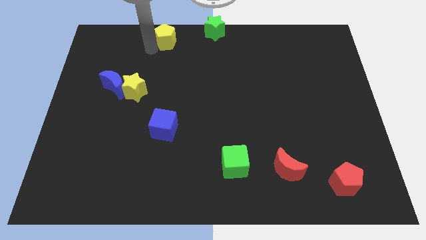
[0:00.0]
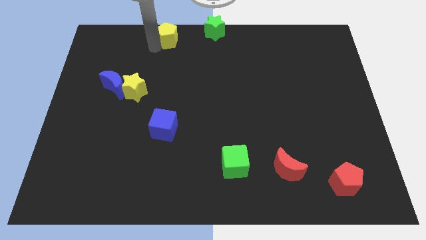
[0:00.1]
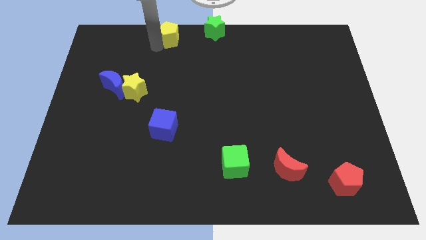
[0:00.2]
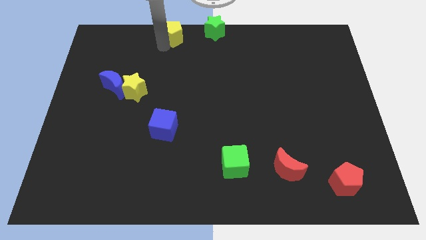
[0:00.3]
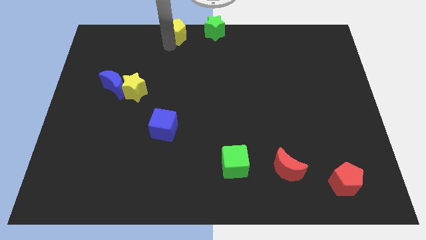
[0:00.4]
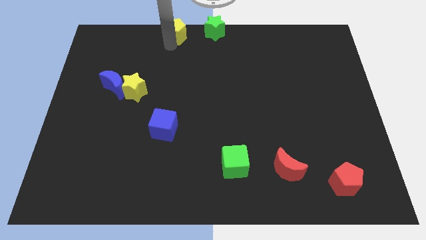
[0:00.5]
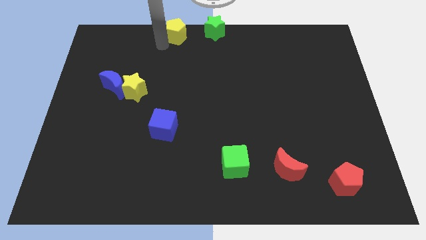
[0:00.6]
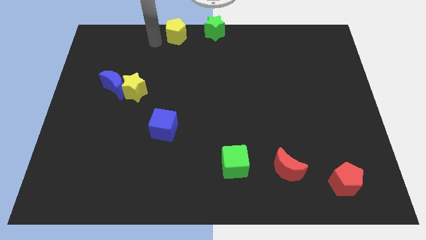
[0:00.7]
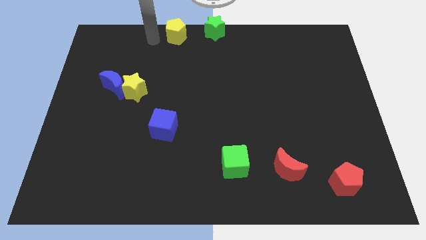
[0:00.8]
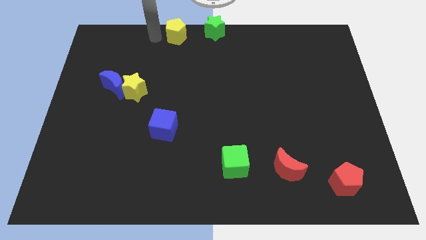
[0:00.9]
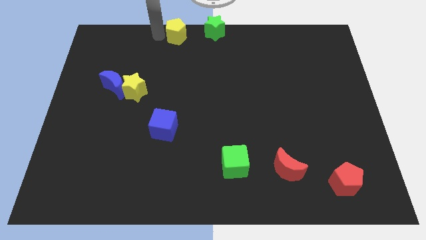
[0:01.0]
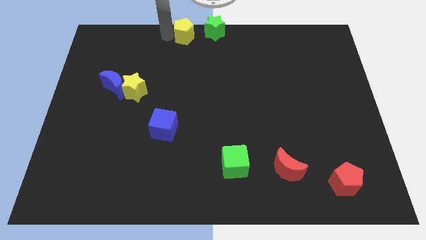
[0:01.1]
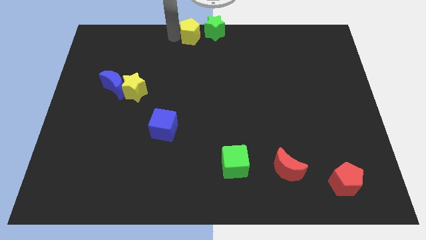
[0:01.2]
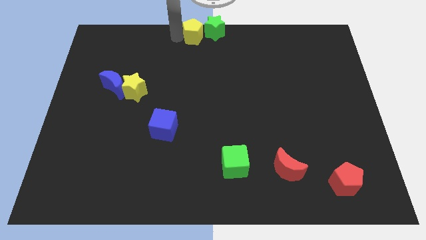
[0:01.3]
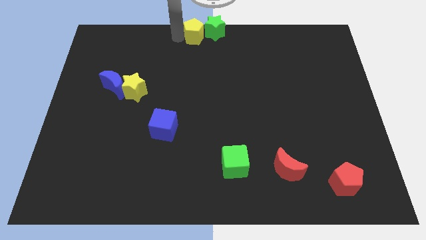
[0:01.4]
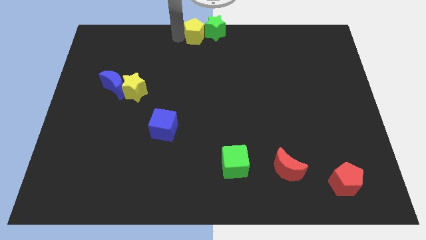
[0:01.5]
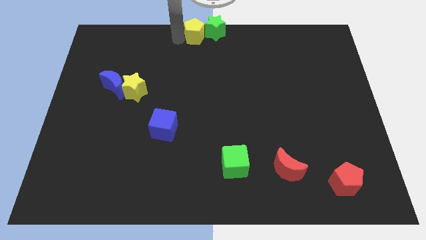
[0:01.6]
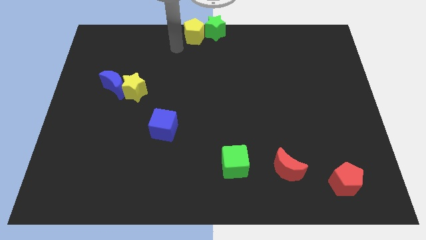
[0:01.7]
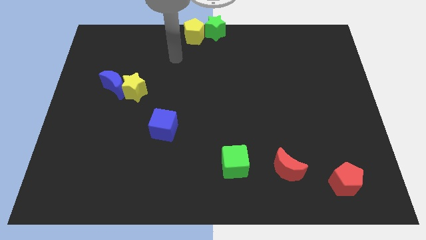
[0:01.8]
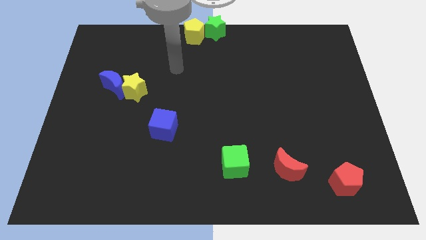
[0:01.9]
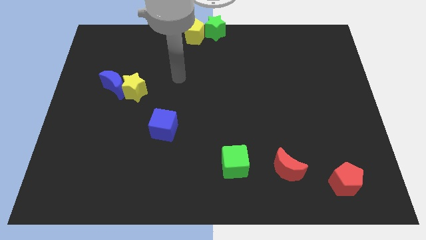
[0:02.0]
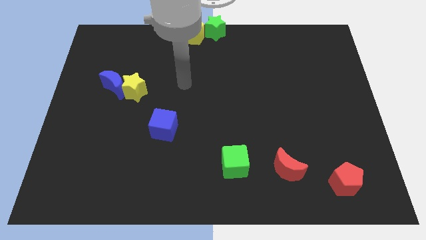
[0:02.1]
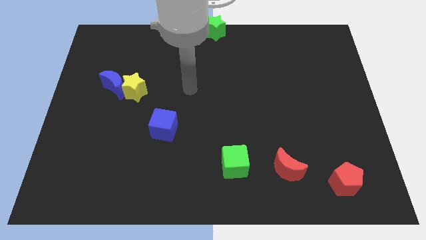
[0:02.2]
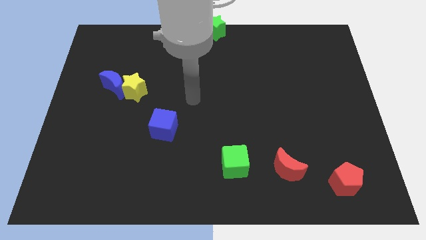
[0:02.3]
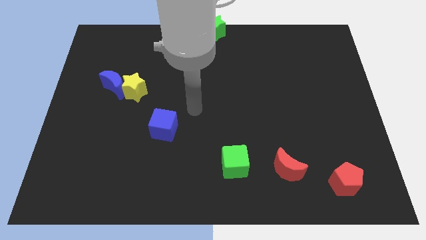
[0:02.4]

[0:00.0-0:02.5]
push the yellow pentagon into the green star

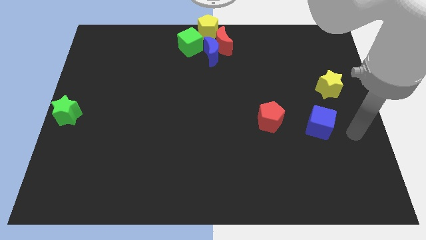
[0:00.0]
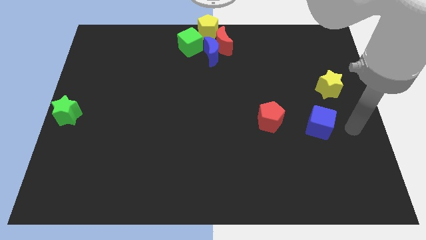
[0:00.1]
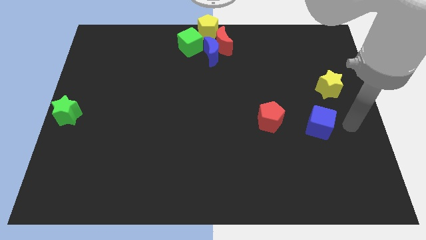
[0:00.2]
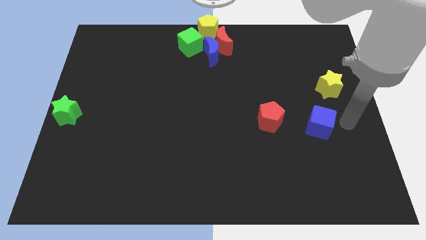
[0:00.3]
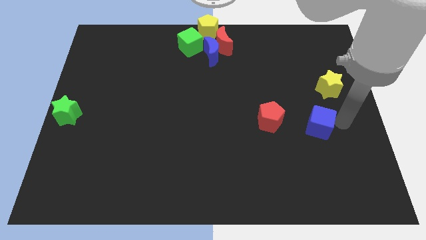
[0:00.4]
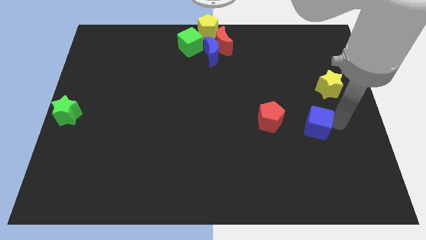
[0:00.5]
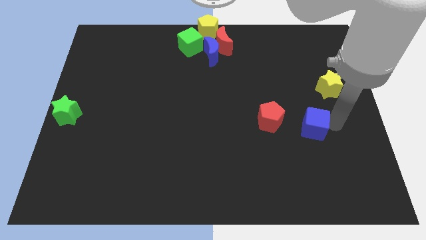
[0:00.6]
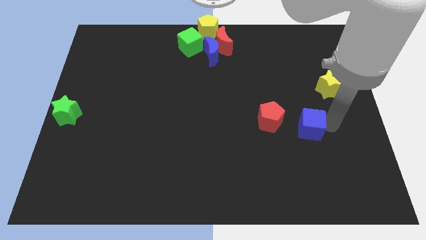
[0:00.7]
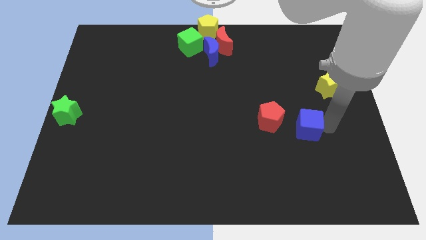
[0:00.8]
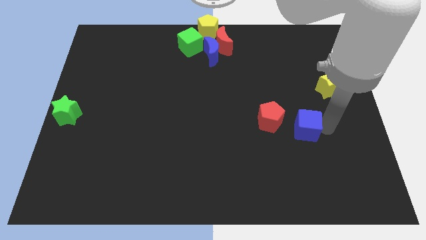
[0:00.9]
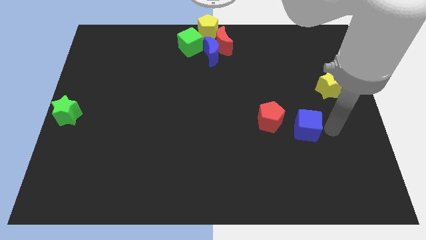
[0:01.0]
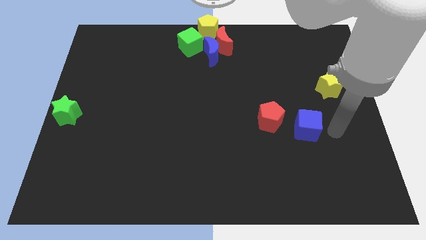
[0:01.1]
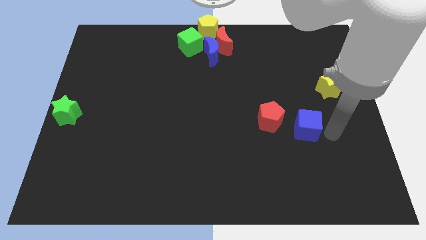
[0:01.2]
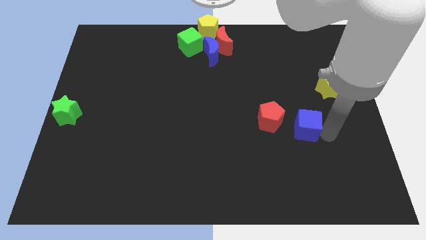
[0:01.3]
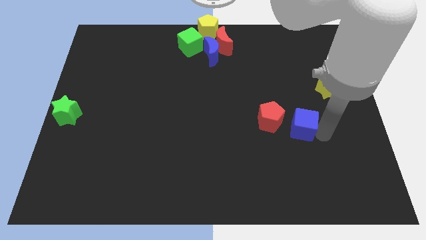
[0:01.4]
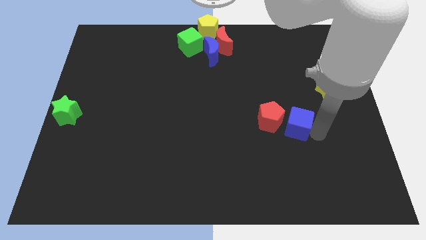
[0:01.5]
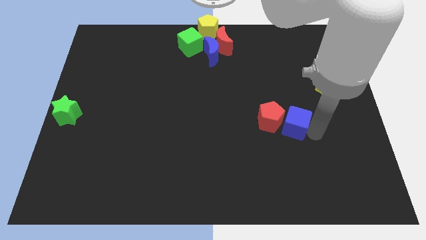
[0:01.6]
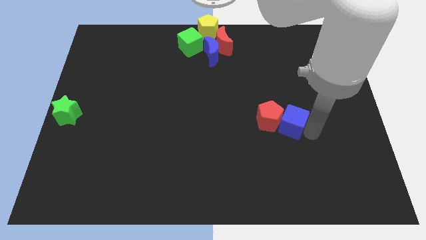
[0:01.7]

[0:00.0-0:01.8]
slide the blue cube into the right side of the red pentagon

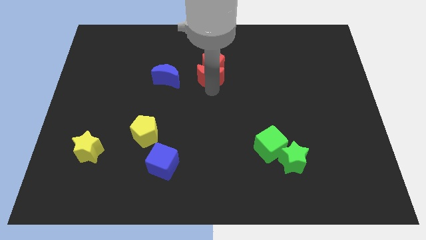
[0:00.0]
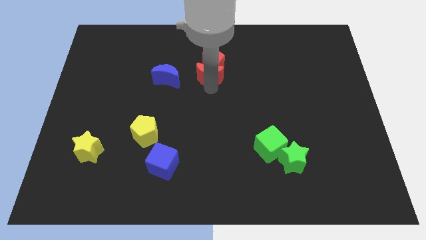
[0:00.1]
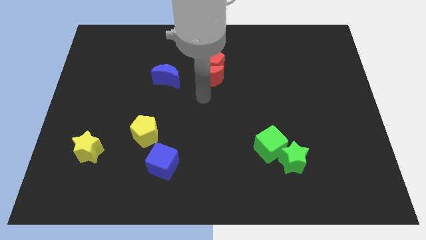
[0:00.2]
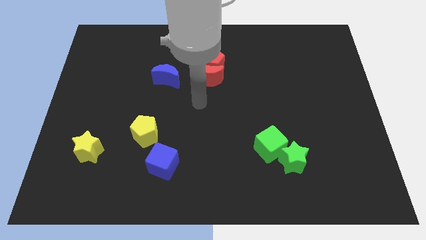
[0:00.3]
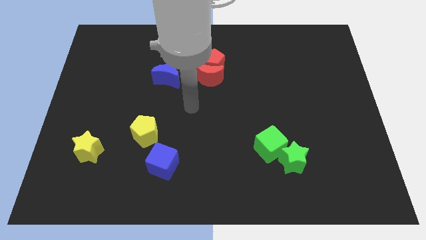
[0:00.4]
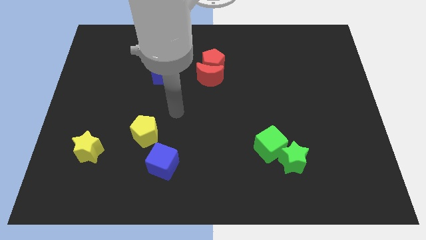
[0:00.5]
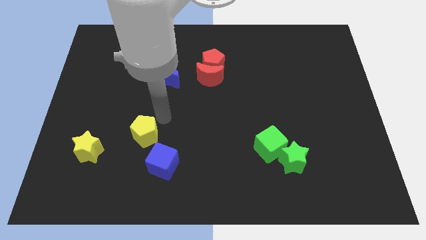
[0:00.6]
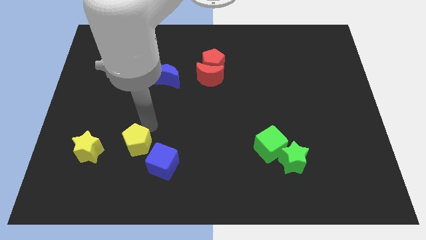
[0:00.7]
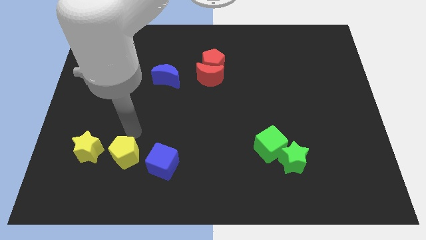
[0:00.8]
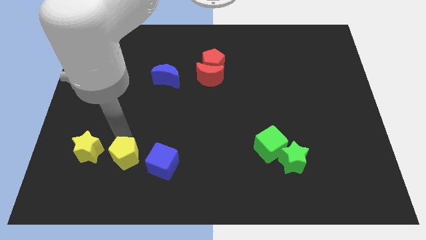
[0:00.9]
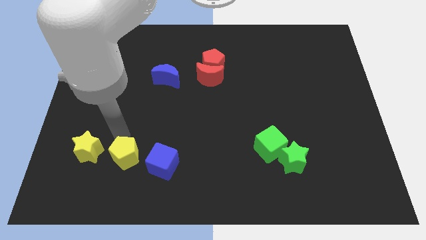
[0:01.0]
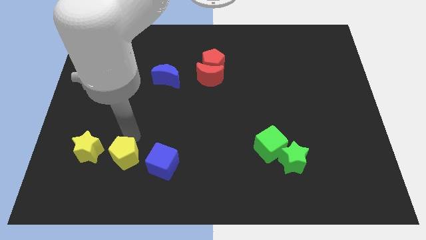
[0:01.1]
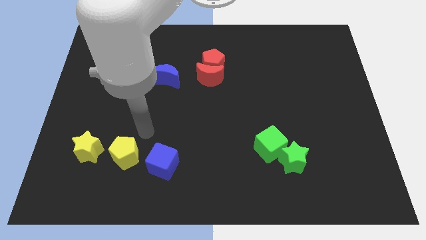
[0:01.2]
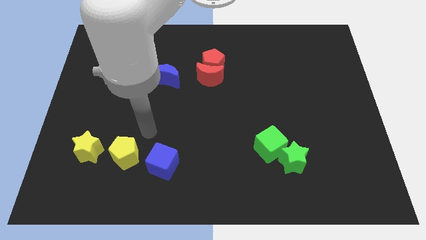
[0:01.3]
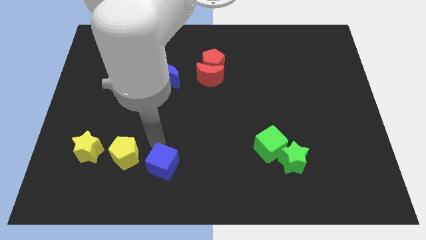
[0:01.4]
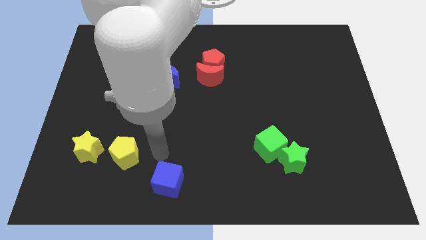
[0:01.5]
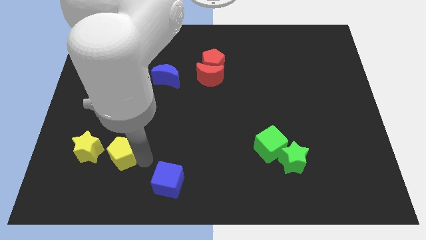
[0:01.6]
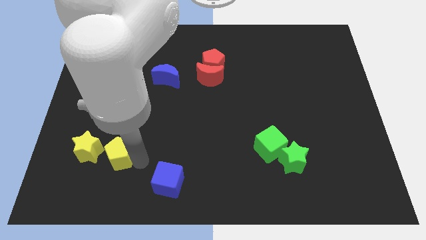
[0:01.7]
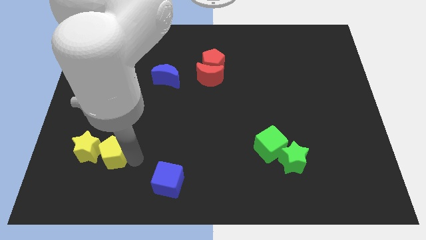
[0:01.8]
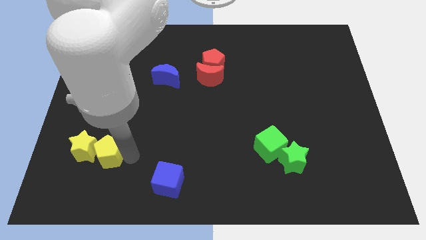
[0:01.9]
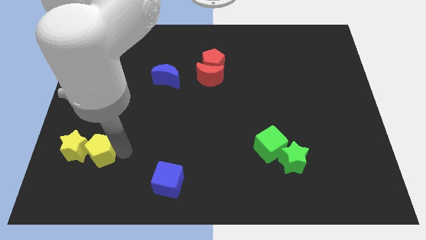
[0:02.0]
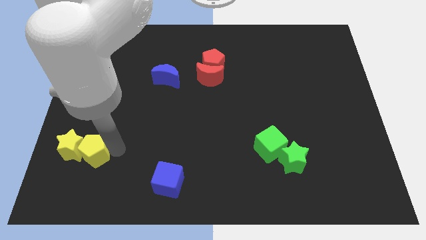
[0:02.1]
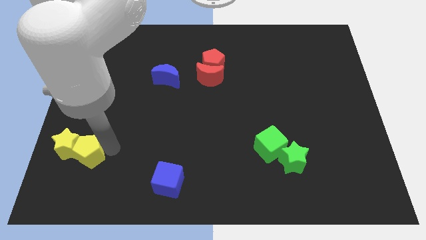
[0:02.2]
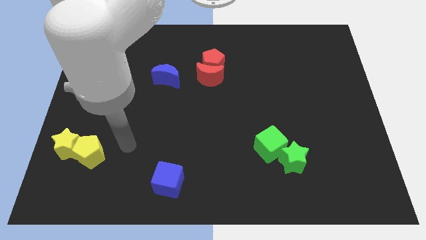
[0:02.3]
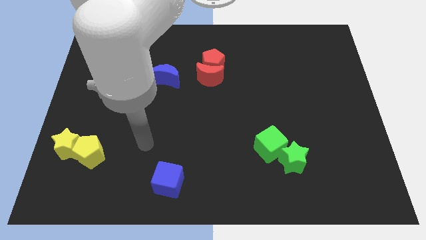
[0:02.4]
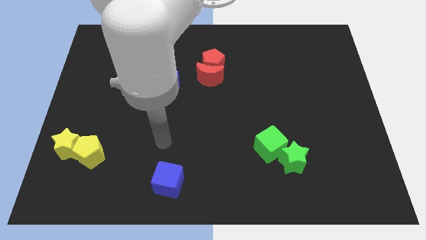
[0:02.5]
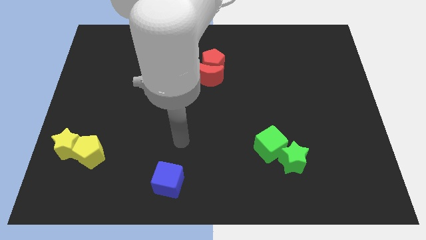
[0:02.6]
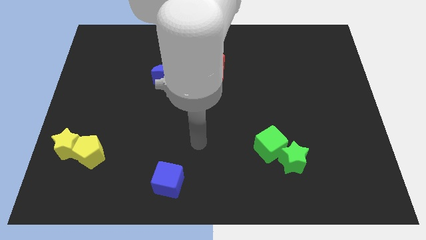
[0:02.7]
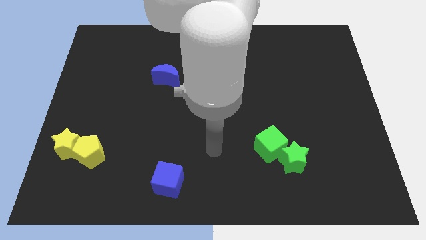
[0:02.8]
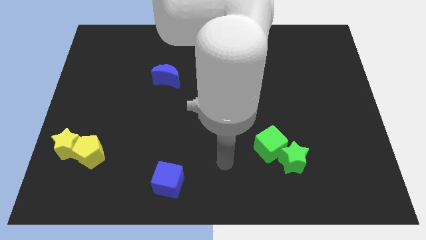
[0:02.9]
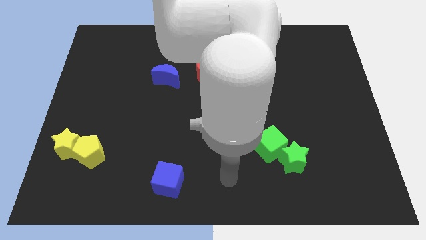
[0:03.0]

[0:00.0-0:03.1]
push the yellow pentagon into yellow star

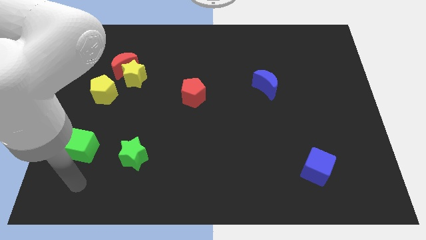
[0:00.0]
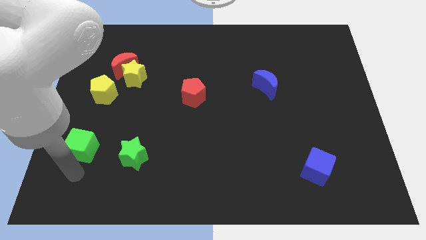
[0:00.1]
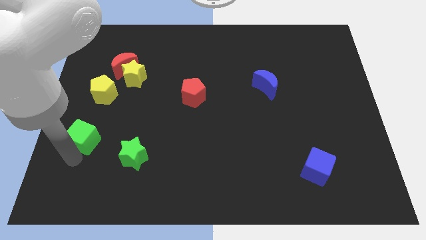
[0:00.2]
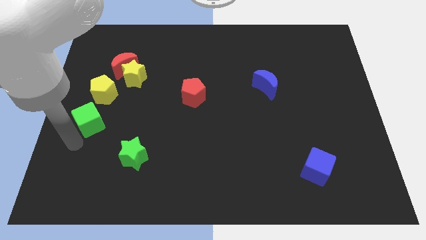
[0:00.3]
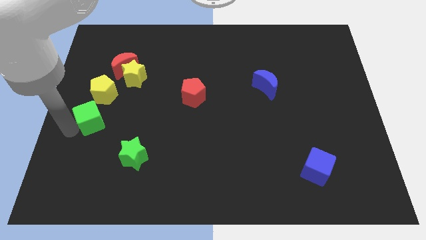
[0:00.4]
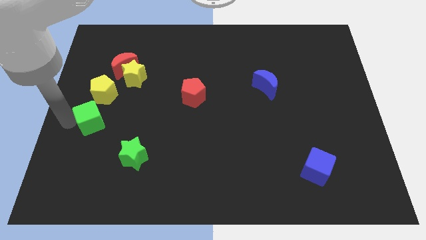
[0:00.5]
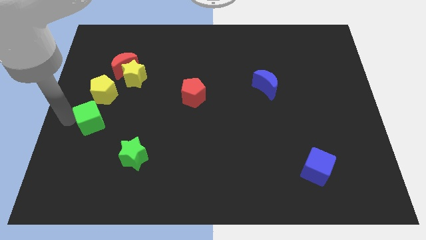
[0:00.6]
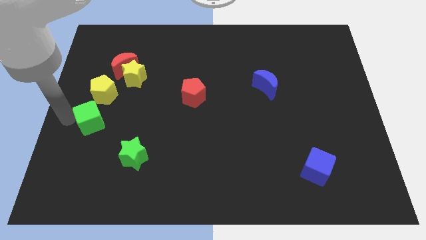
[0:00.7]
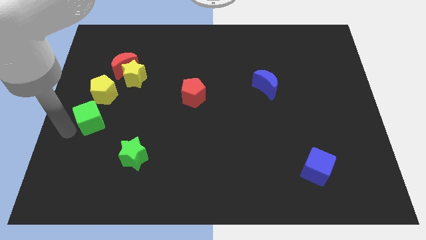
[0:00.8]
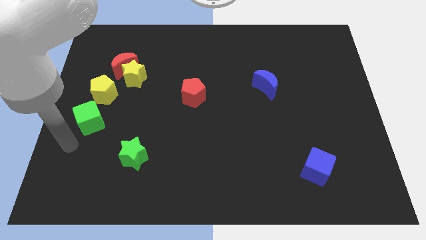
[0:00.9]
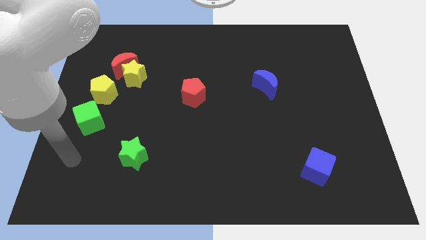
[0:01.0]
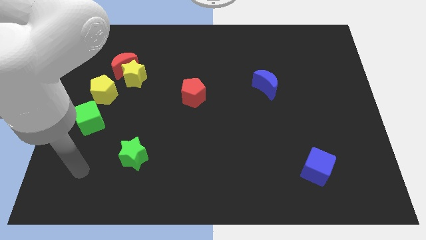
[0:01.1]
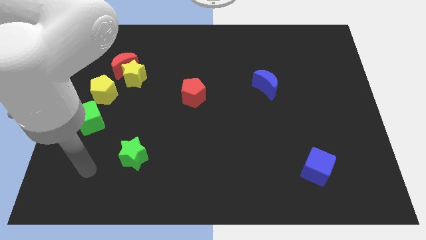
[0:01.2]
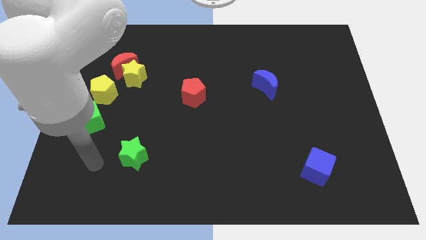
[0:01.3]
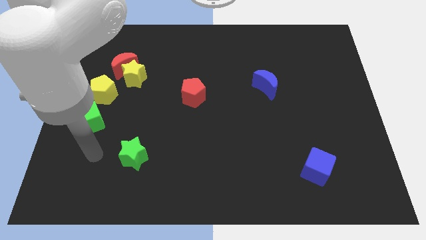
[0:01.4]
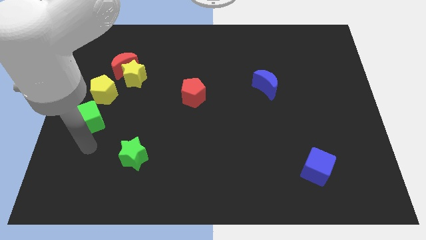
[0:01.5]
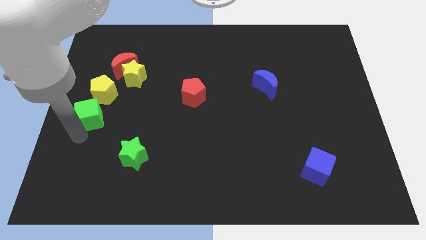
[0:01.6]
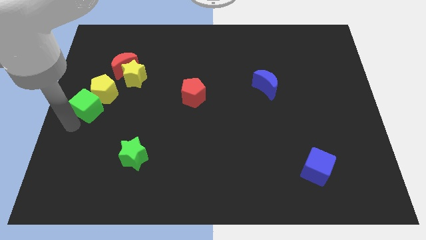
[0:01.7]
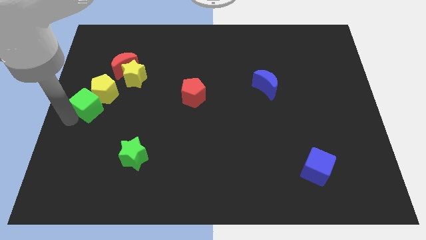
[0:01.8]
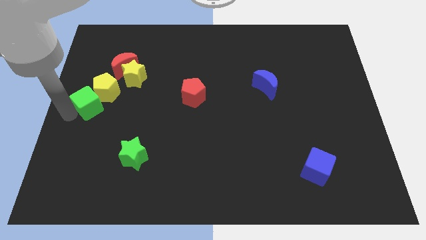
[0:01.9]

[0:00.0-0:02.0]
push the green cube into the yellow pentagon
